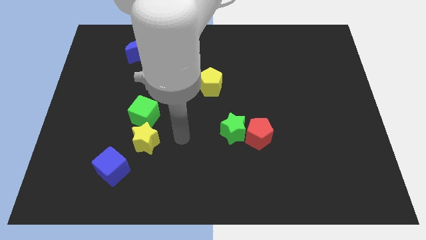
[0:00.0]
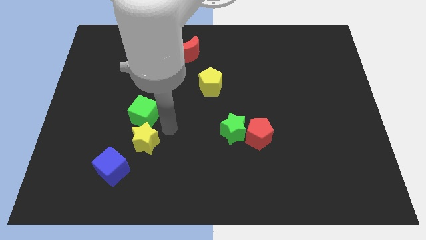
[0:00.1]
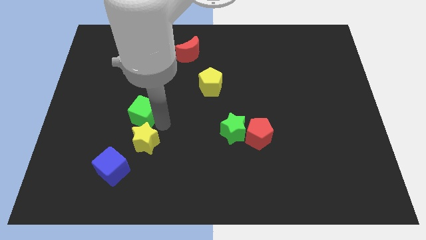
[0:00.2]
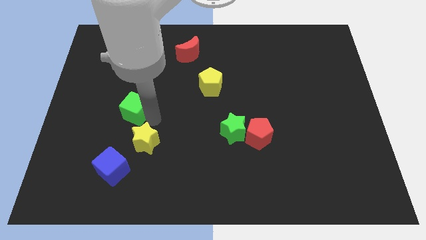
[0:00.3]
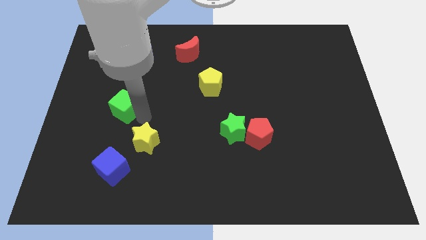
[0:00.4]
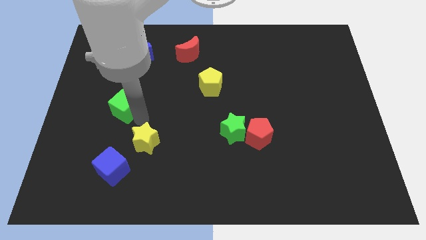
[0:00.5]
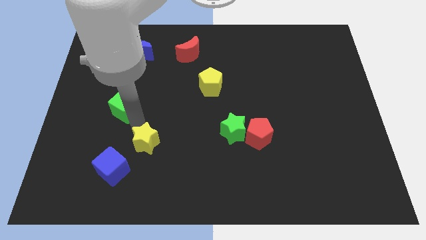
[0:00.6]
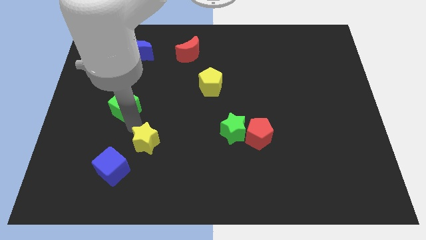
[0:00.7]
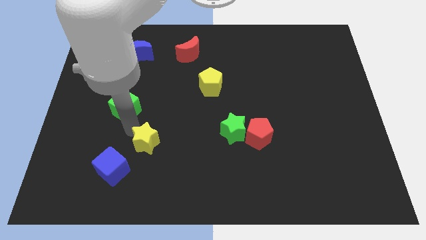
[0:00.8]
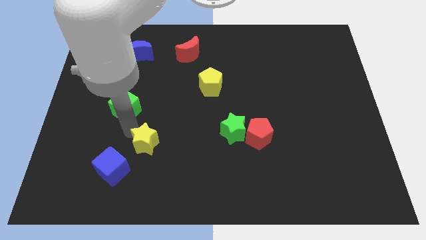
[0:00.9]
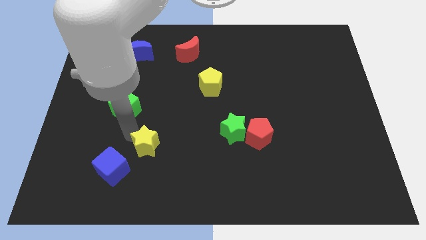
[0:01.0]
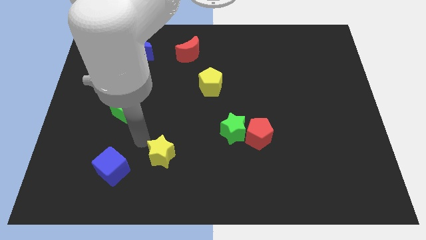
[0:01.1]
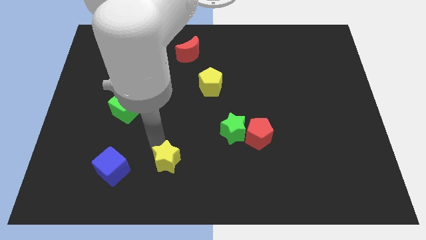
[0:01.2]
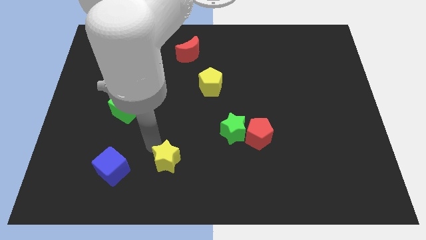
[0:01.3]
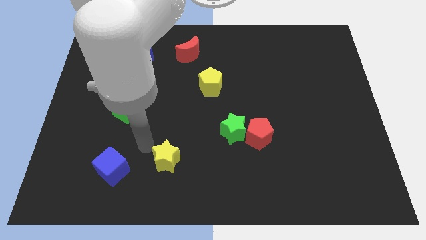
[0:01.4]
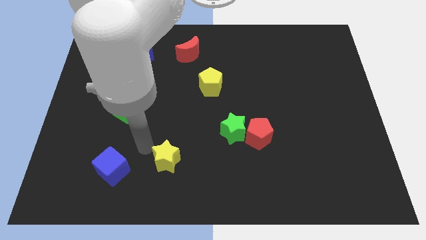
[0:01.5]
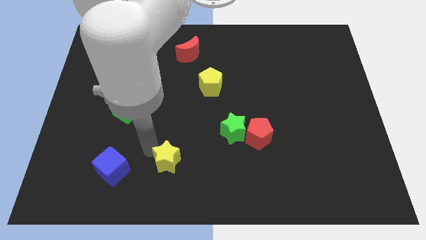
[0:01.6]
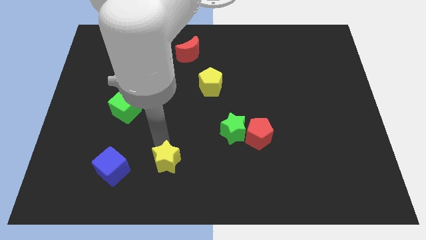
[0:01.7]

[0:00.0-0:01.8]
separate the yellow star from the green cube

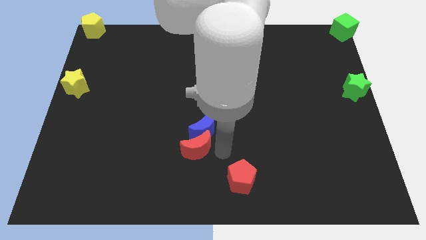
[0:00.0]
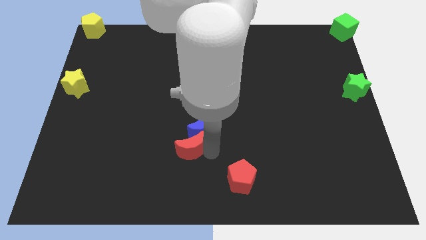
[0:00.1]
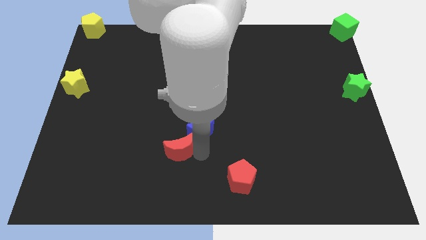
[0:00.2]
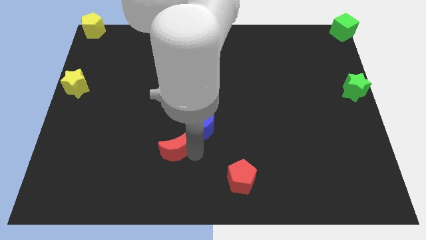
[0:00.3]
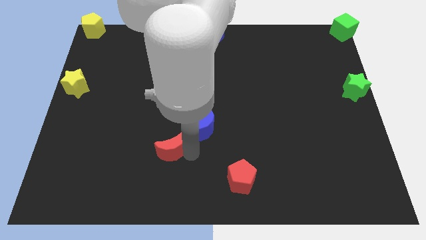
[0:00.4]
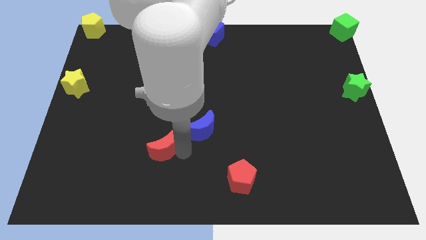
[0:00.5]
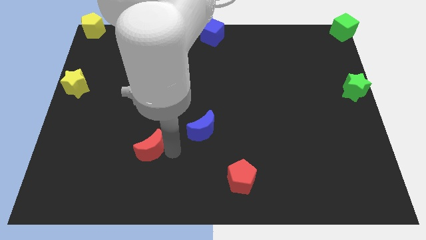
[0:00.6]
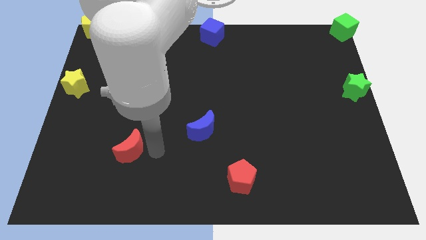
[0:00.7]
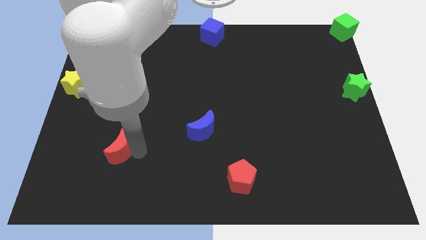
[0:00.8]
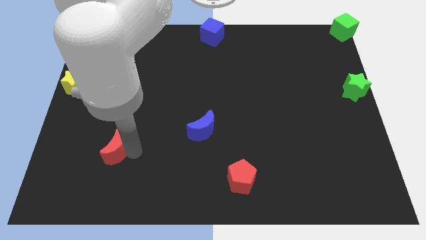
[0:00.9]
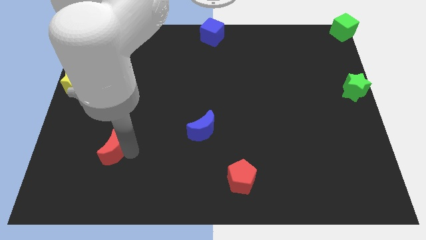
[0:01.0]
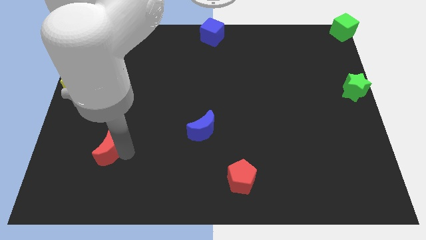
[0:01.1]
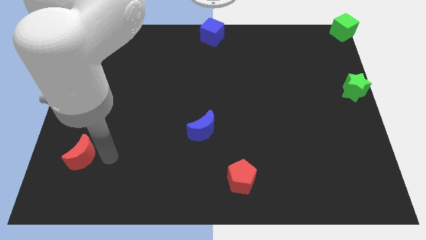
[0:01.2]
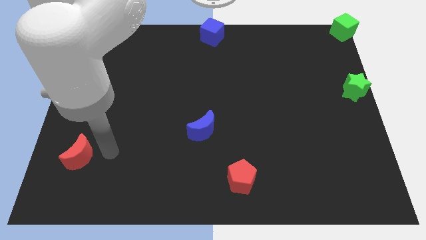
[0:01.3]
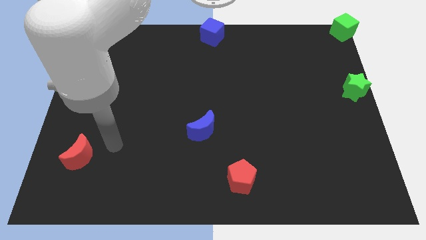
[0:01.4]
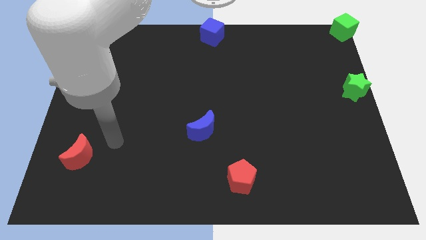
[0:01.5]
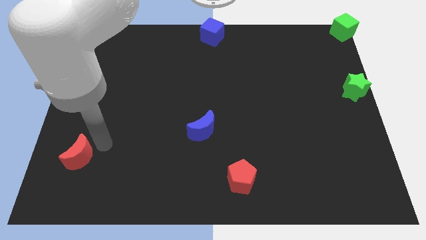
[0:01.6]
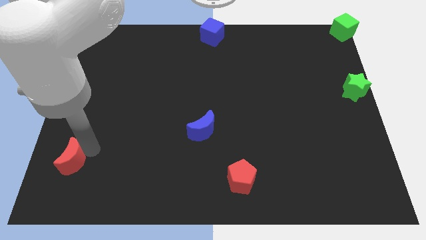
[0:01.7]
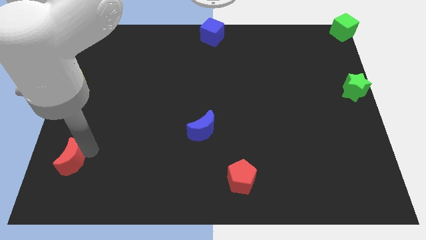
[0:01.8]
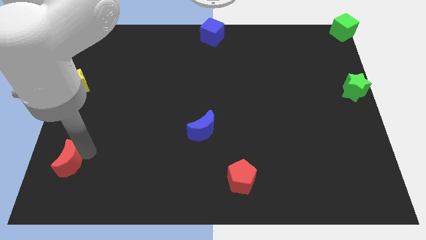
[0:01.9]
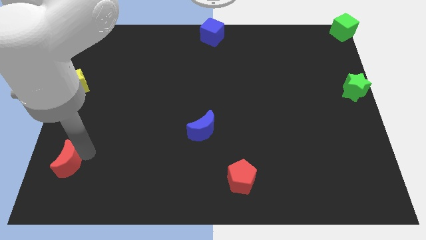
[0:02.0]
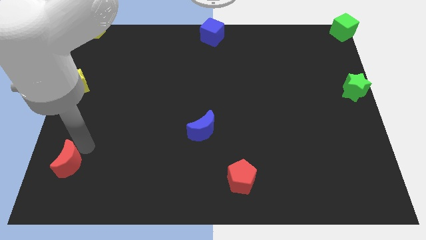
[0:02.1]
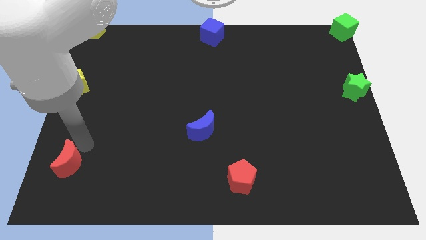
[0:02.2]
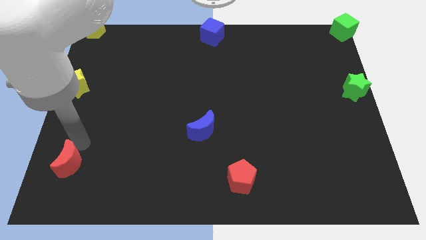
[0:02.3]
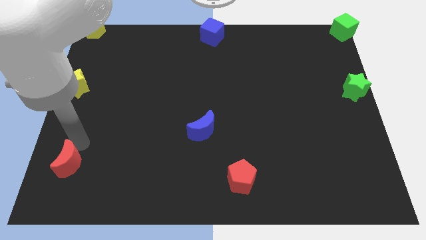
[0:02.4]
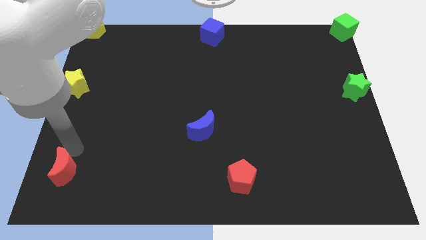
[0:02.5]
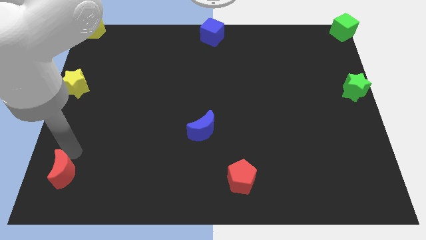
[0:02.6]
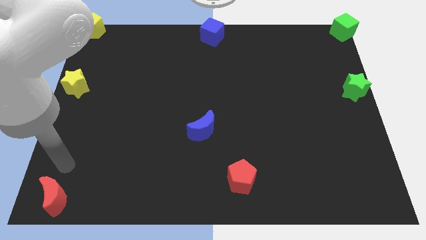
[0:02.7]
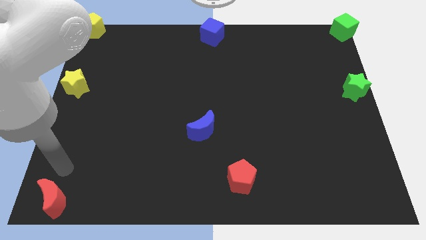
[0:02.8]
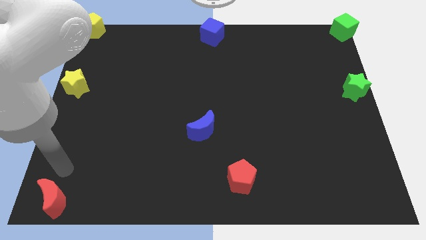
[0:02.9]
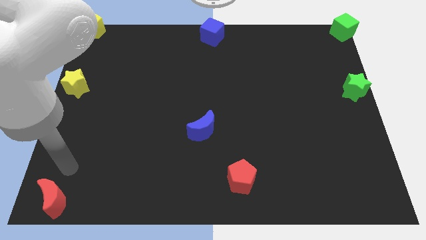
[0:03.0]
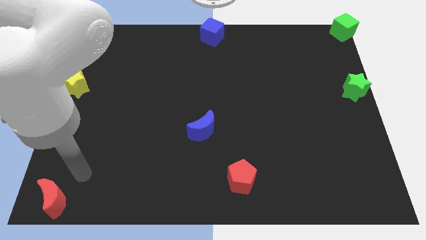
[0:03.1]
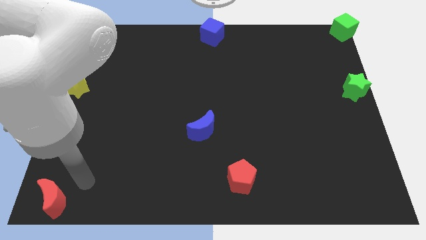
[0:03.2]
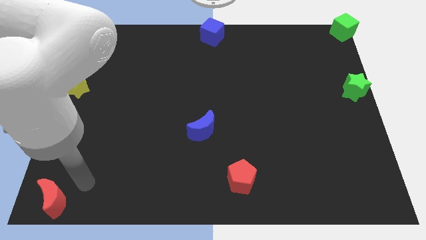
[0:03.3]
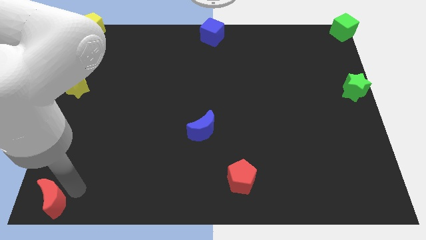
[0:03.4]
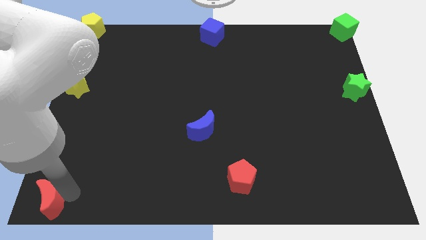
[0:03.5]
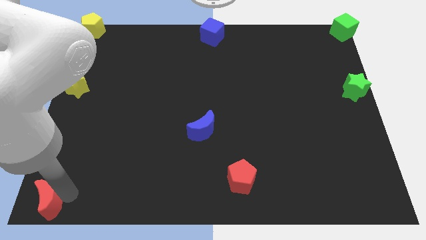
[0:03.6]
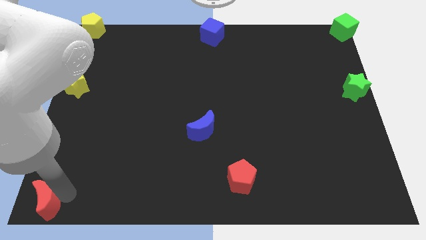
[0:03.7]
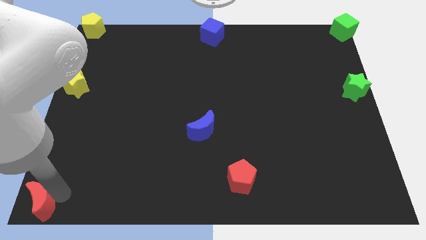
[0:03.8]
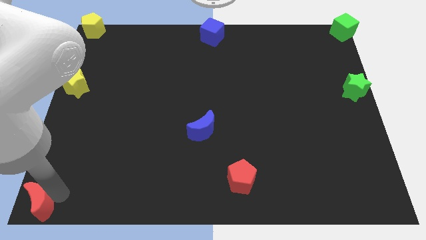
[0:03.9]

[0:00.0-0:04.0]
place the red moon to the bottom left corner of the board

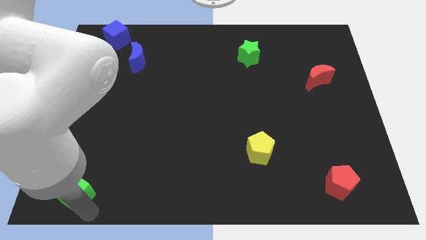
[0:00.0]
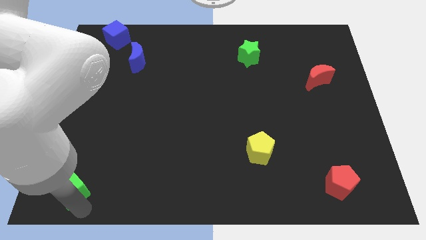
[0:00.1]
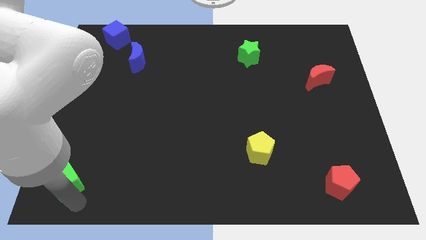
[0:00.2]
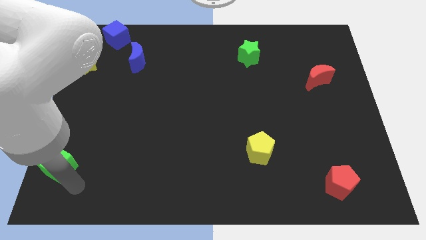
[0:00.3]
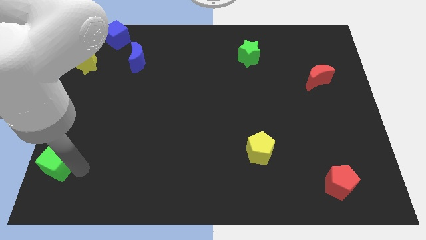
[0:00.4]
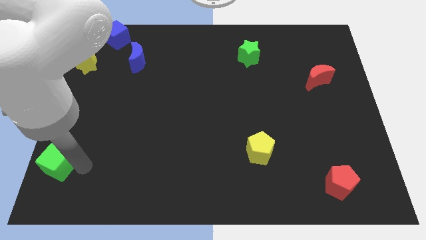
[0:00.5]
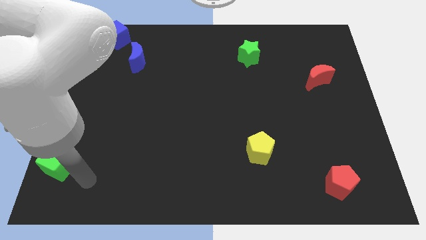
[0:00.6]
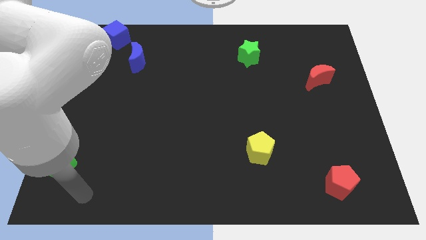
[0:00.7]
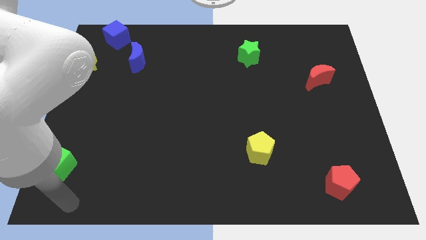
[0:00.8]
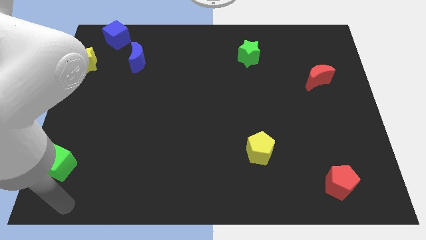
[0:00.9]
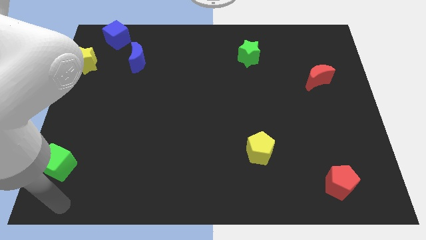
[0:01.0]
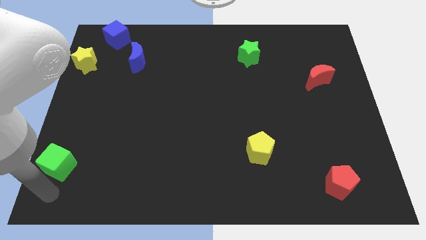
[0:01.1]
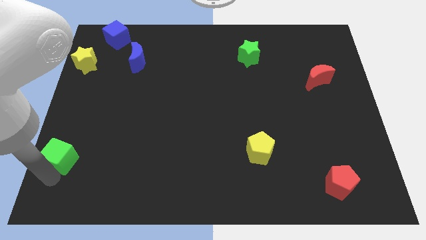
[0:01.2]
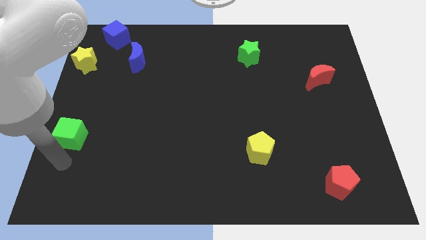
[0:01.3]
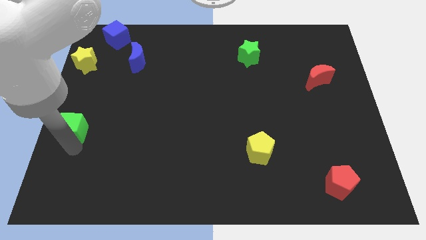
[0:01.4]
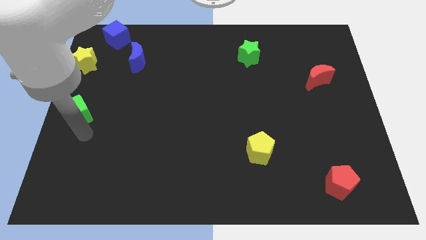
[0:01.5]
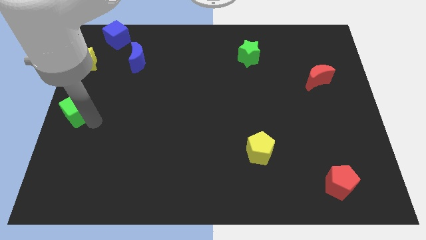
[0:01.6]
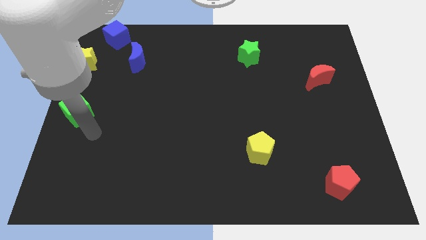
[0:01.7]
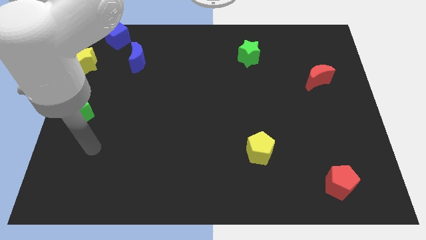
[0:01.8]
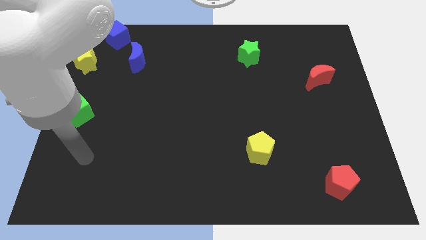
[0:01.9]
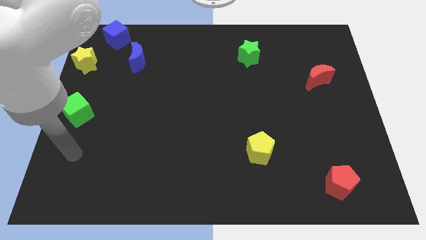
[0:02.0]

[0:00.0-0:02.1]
slide green cube to the center left

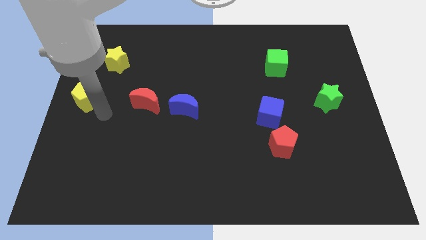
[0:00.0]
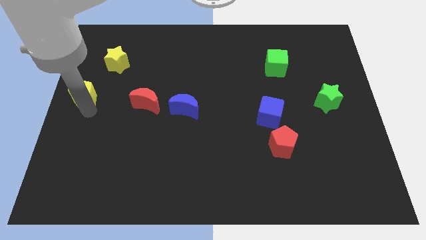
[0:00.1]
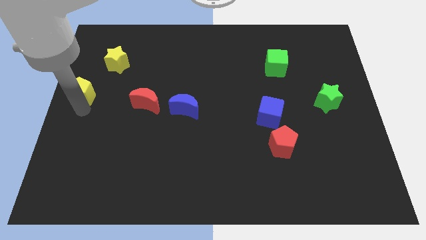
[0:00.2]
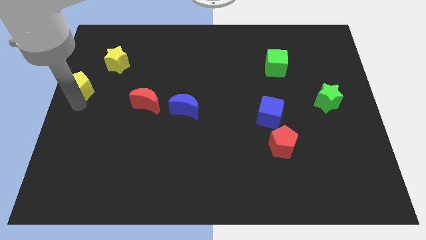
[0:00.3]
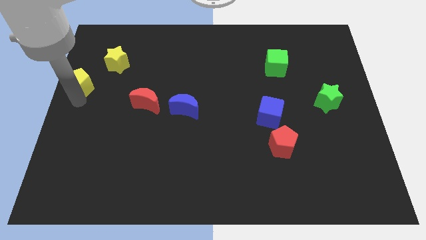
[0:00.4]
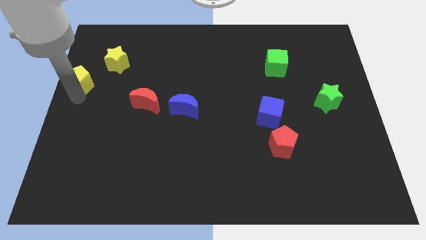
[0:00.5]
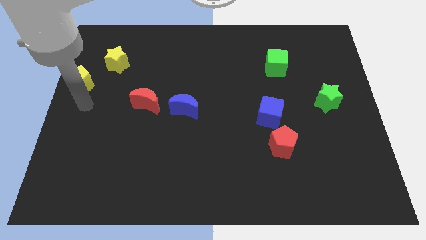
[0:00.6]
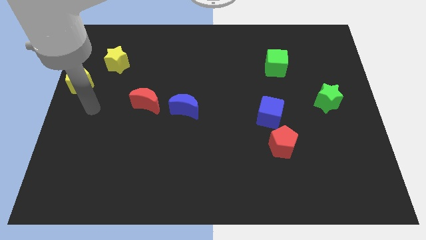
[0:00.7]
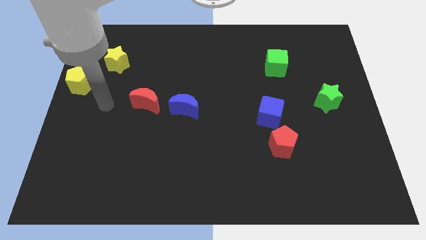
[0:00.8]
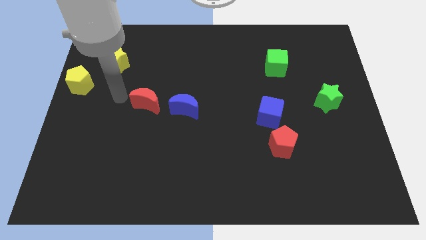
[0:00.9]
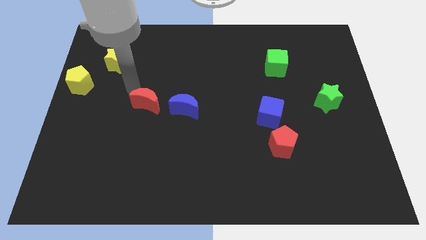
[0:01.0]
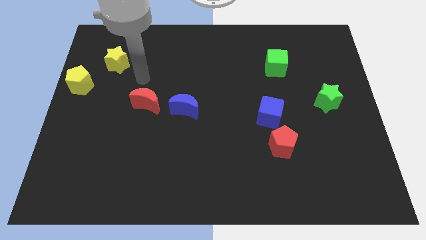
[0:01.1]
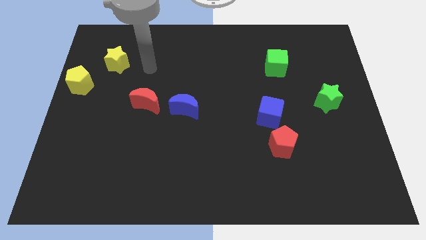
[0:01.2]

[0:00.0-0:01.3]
move the yellow pentagon uowards
